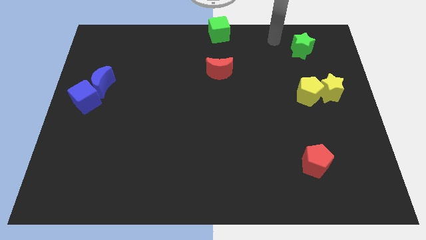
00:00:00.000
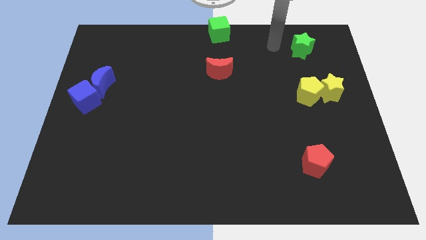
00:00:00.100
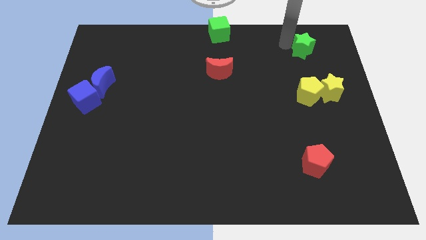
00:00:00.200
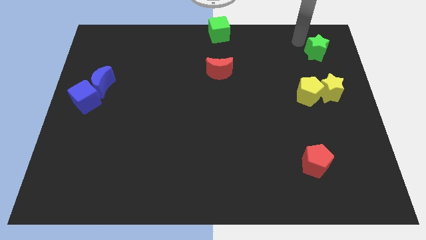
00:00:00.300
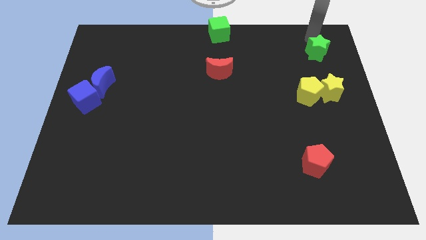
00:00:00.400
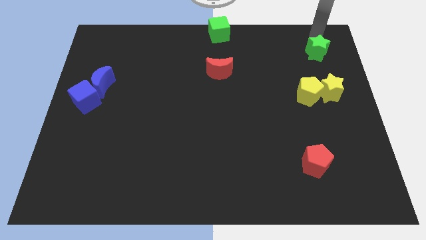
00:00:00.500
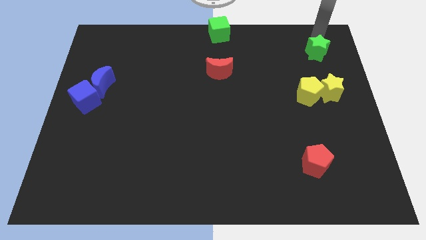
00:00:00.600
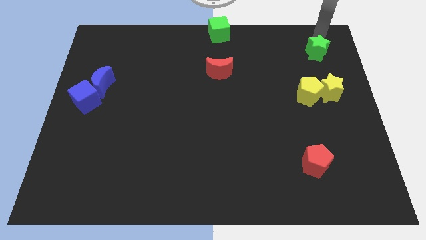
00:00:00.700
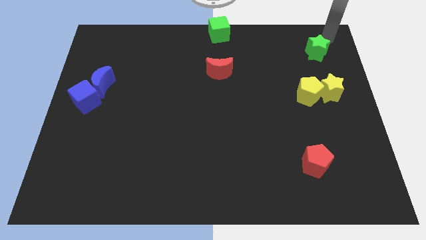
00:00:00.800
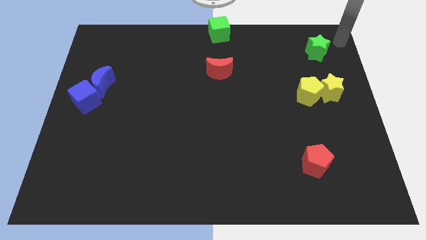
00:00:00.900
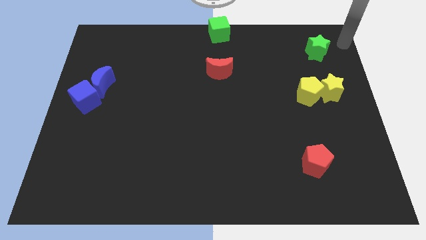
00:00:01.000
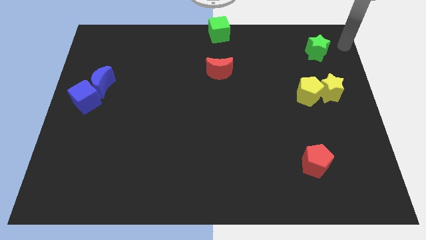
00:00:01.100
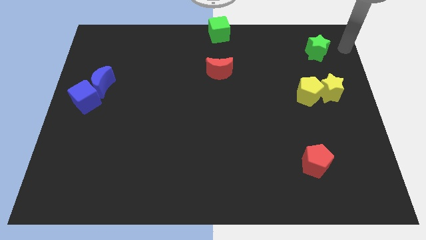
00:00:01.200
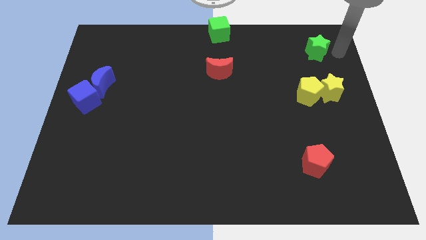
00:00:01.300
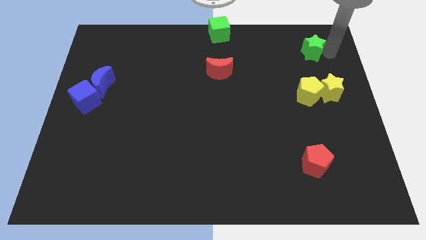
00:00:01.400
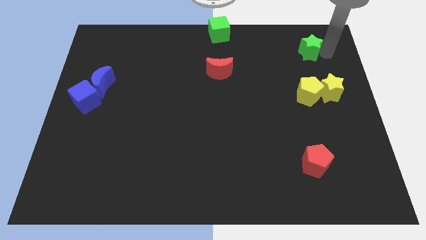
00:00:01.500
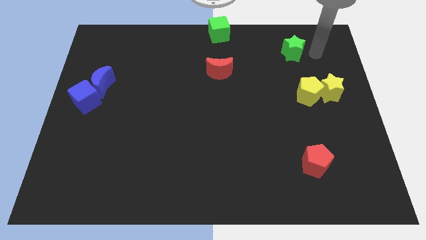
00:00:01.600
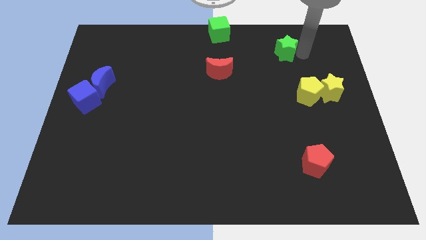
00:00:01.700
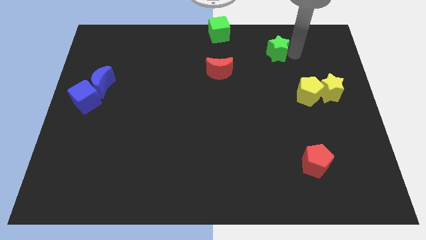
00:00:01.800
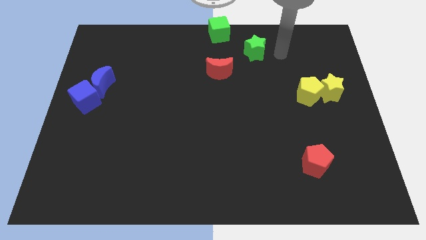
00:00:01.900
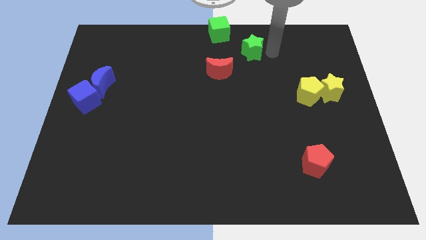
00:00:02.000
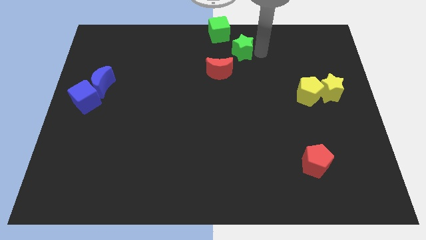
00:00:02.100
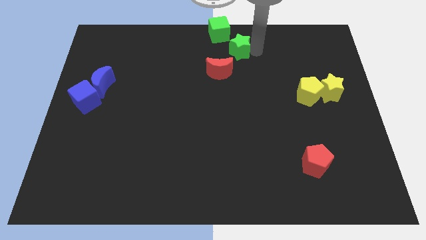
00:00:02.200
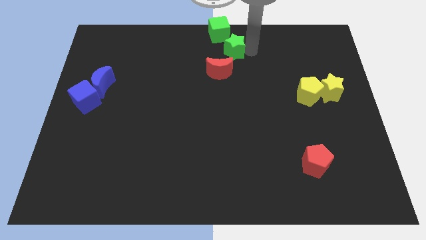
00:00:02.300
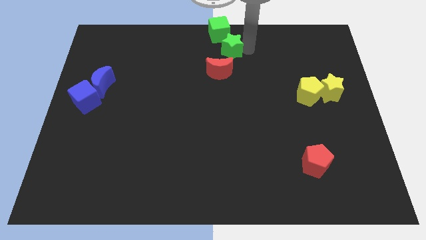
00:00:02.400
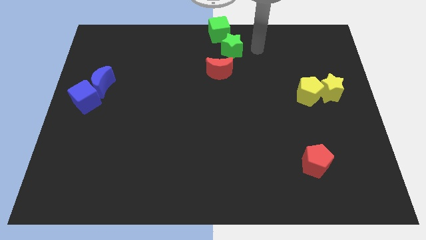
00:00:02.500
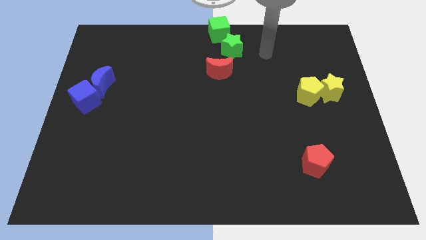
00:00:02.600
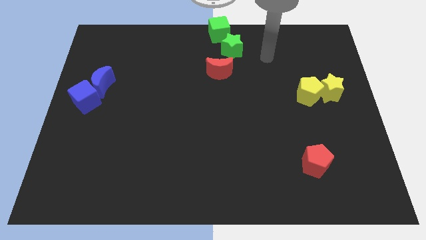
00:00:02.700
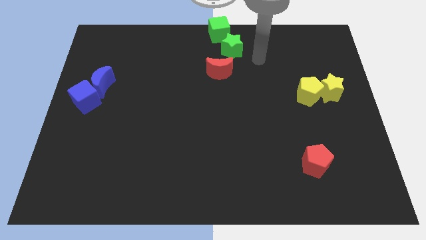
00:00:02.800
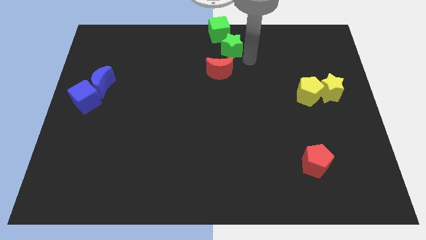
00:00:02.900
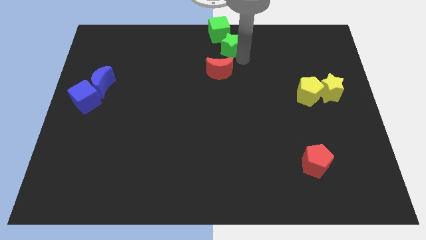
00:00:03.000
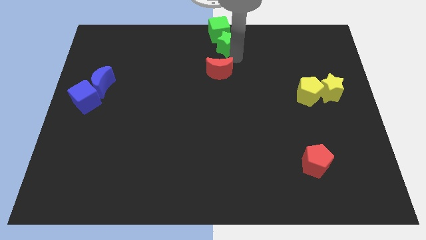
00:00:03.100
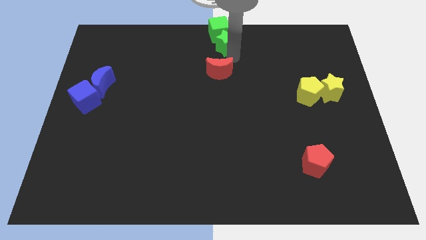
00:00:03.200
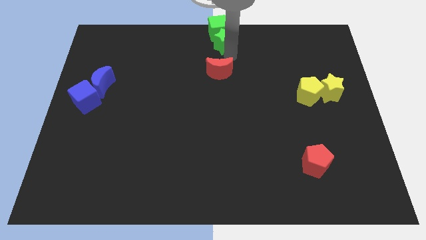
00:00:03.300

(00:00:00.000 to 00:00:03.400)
push the green star into green cube

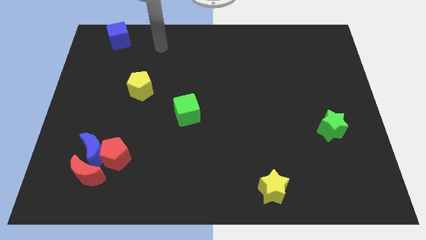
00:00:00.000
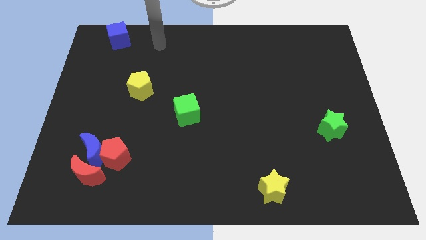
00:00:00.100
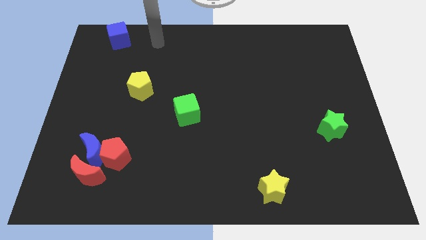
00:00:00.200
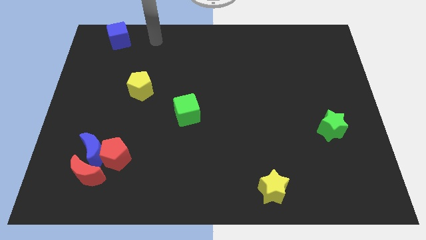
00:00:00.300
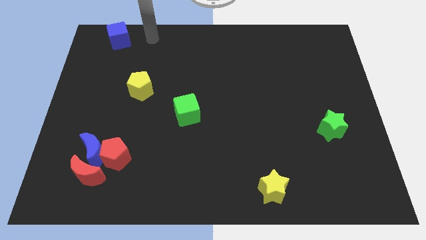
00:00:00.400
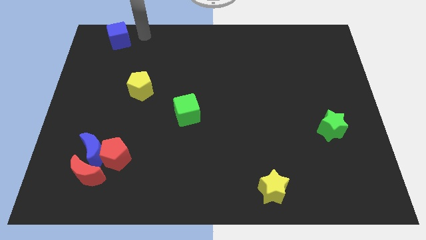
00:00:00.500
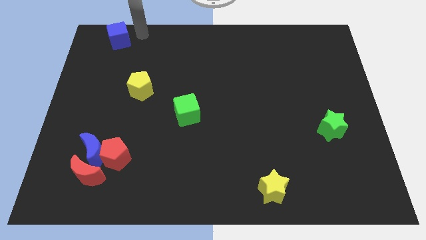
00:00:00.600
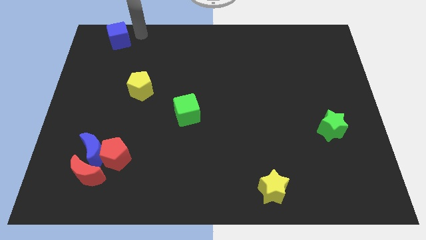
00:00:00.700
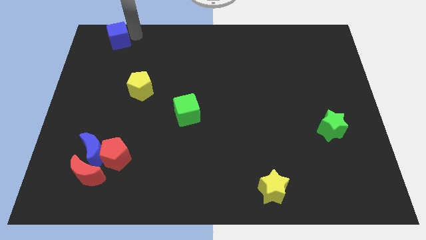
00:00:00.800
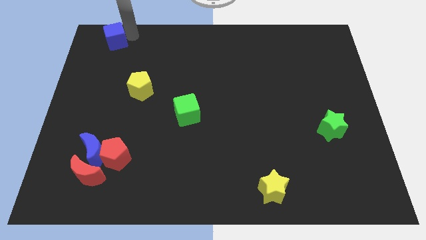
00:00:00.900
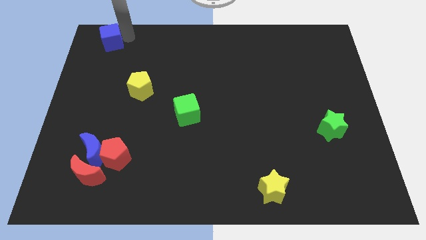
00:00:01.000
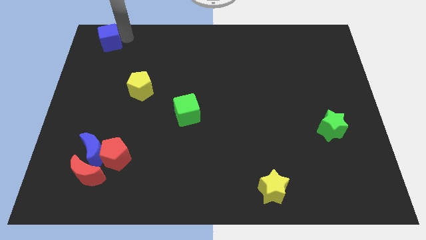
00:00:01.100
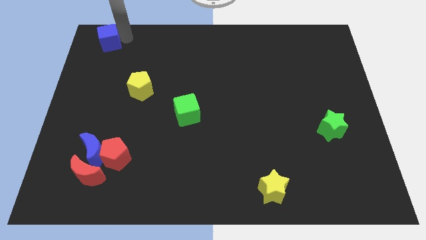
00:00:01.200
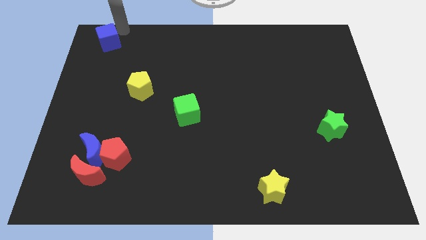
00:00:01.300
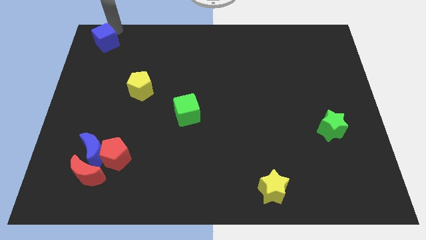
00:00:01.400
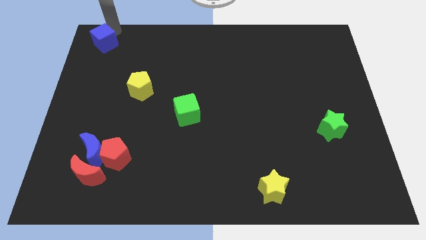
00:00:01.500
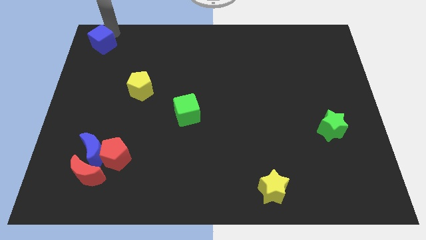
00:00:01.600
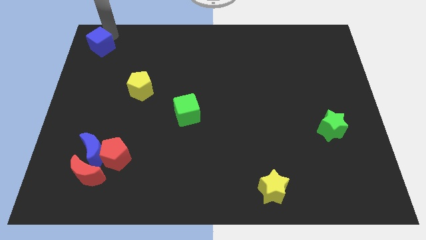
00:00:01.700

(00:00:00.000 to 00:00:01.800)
move the blue cube at the top left corner of the board

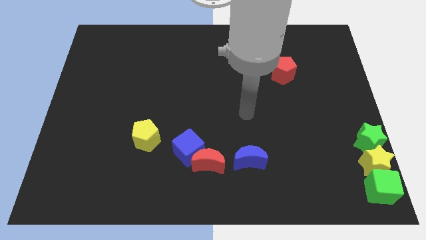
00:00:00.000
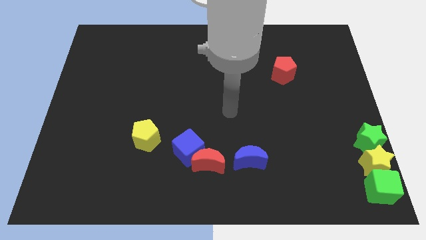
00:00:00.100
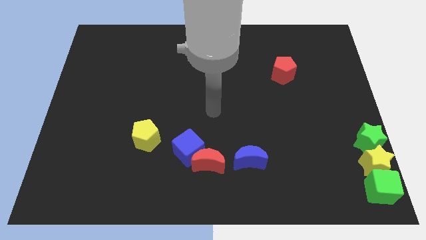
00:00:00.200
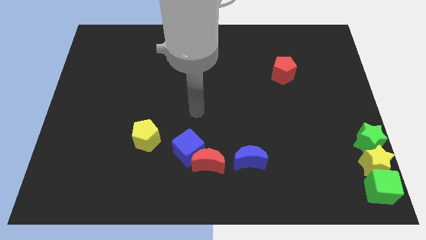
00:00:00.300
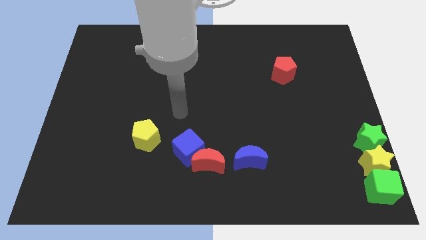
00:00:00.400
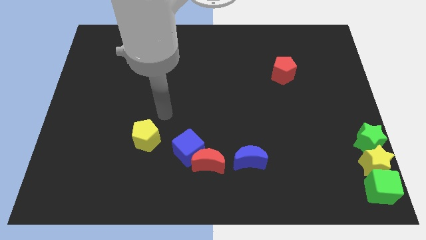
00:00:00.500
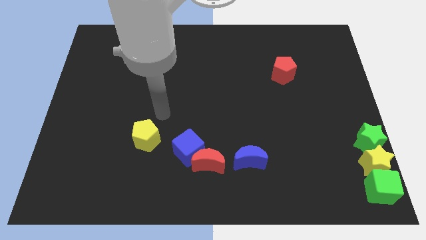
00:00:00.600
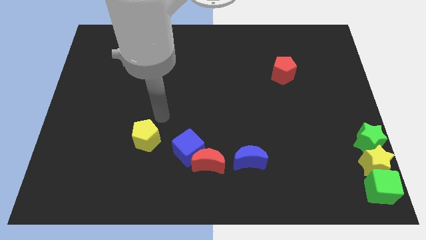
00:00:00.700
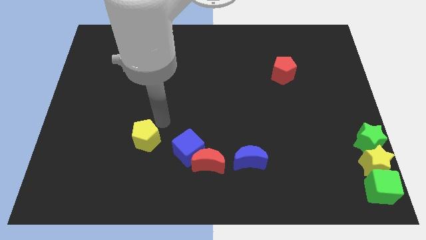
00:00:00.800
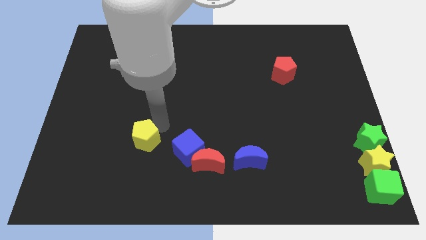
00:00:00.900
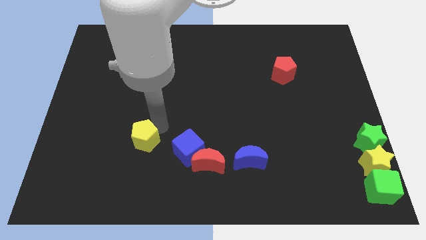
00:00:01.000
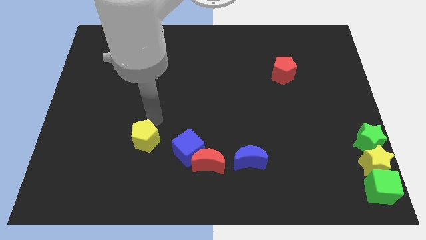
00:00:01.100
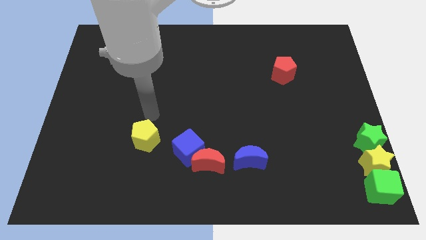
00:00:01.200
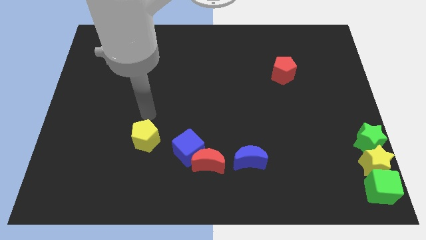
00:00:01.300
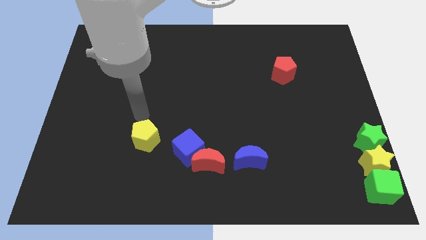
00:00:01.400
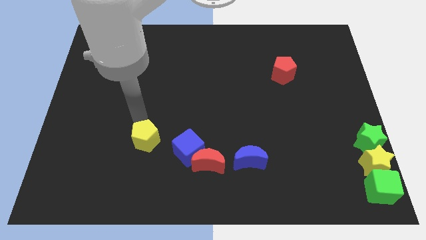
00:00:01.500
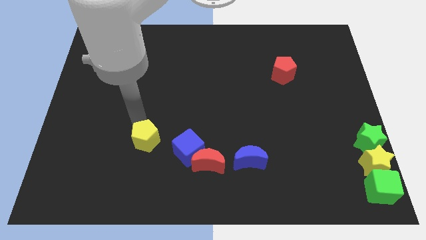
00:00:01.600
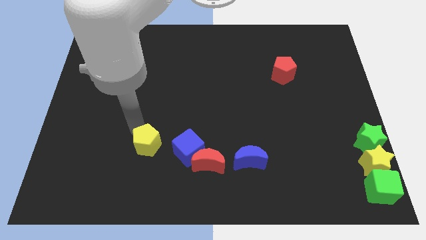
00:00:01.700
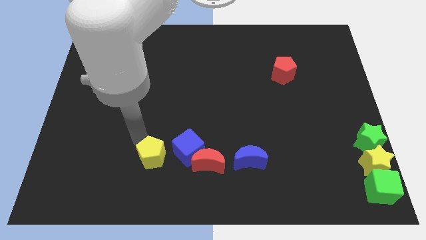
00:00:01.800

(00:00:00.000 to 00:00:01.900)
push the yellow pentagon to the left side of the blue cube

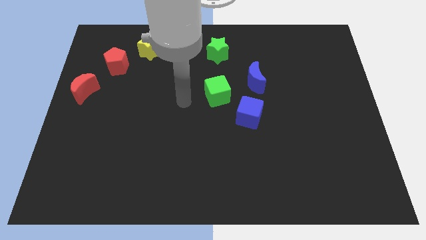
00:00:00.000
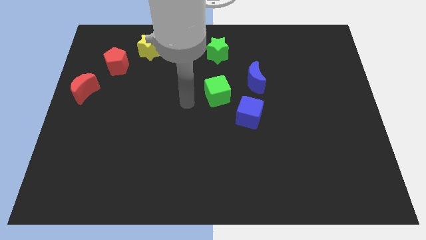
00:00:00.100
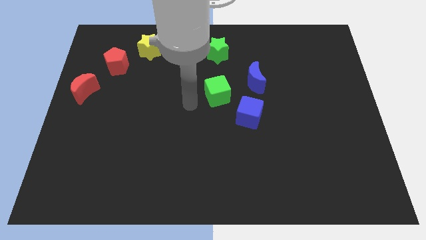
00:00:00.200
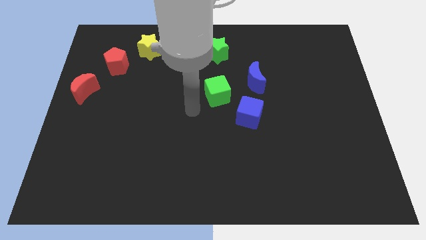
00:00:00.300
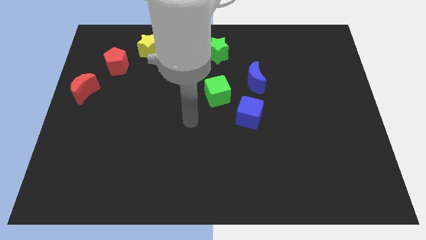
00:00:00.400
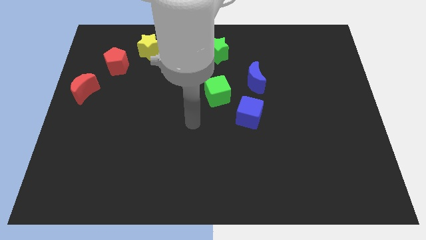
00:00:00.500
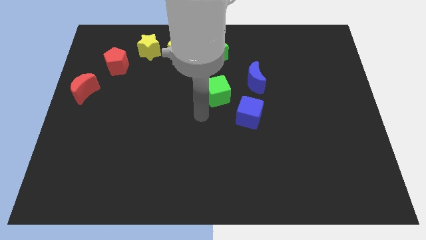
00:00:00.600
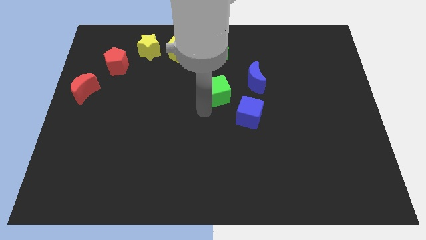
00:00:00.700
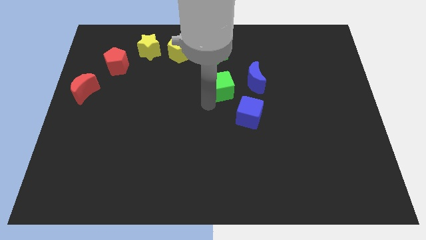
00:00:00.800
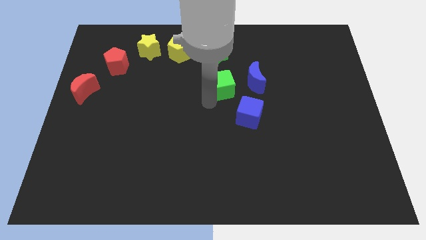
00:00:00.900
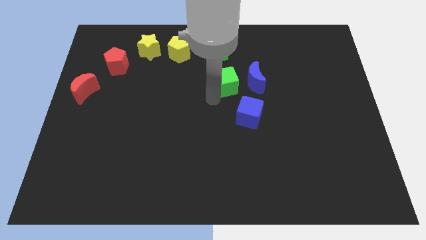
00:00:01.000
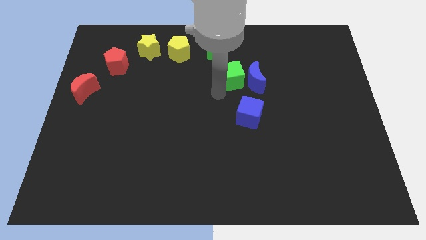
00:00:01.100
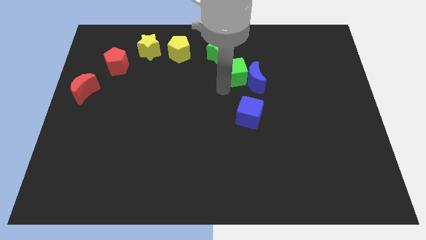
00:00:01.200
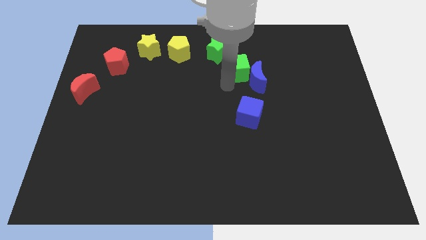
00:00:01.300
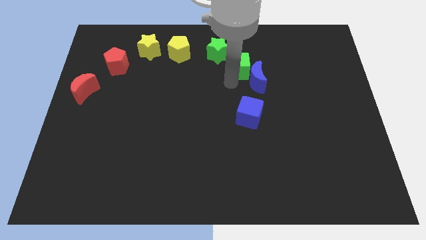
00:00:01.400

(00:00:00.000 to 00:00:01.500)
push the green cube into the blue crescent

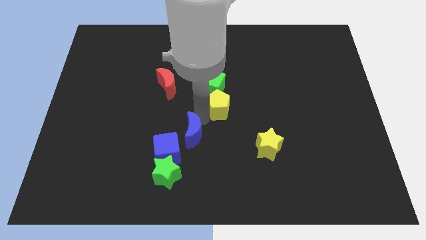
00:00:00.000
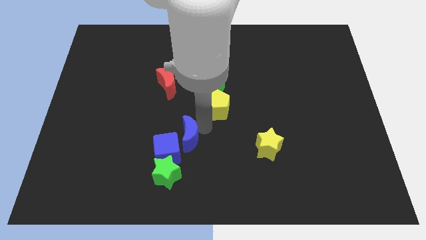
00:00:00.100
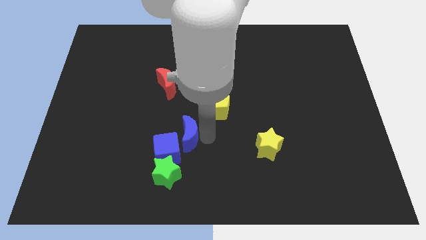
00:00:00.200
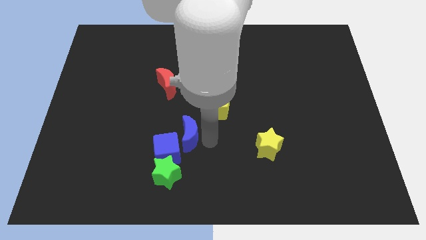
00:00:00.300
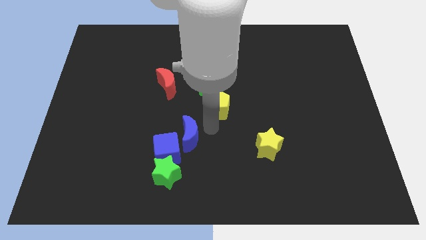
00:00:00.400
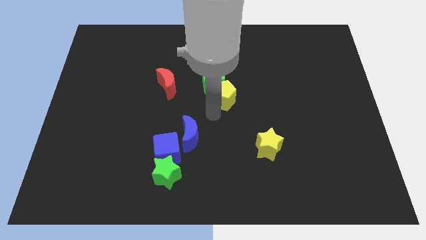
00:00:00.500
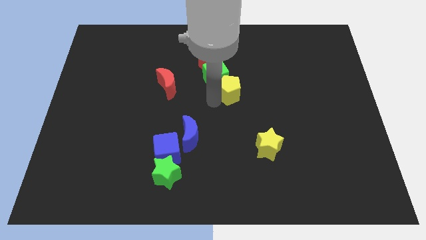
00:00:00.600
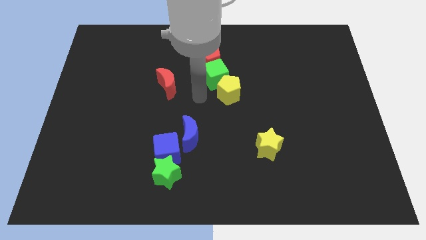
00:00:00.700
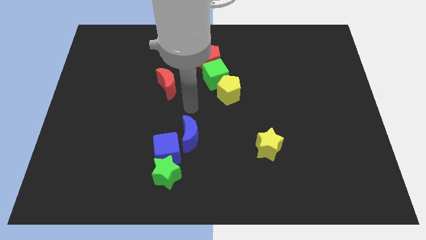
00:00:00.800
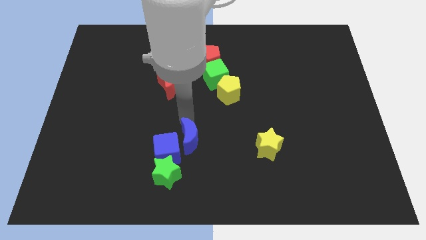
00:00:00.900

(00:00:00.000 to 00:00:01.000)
push the yellow pentagon into the green cube
